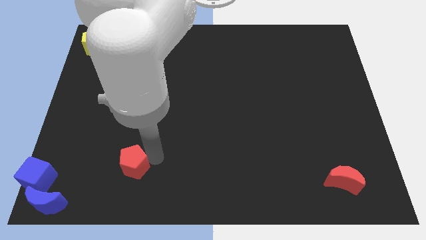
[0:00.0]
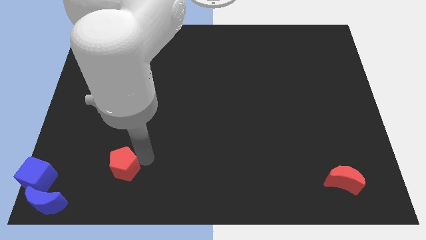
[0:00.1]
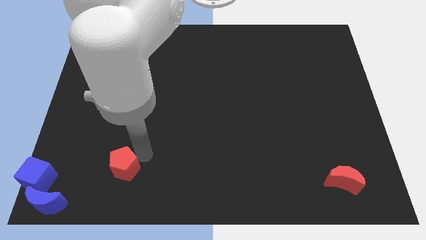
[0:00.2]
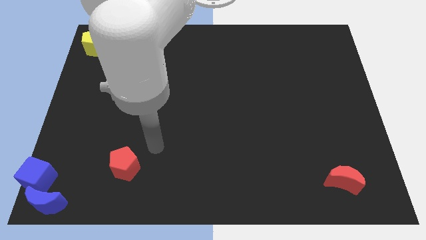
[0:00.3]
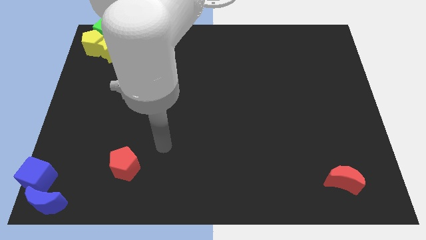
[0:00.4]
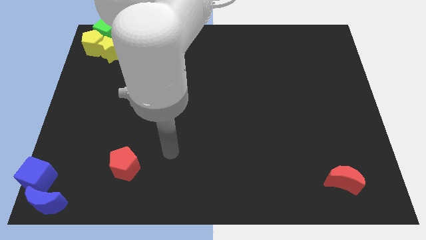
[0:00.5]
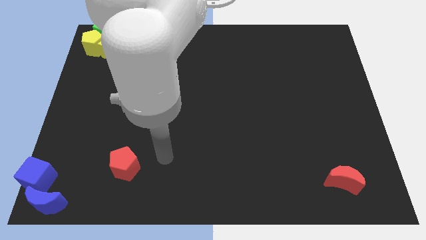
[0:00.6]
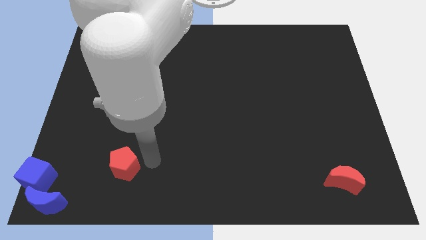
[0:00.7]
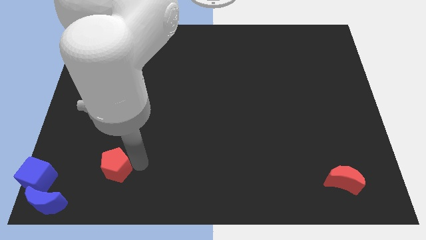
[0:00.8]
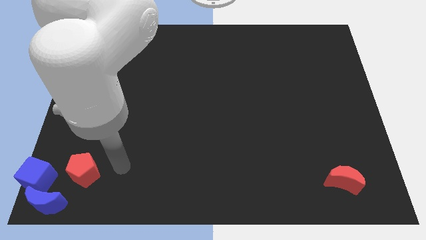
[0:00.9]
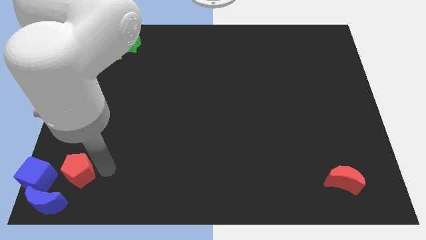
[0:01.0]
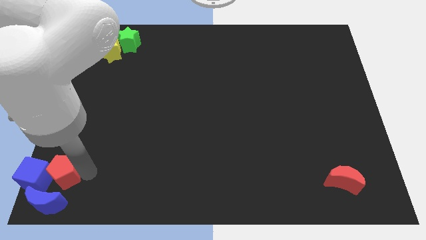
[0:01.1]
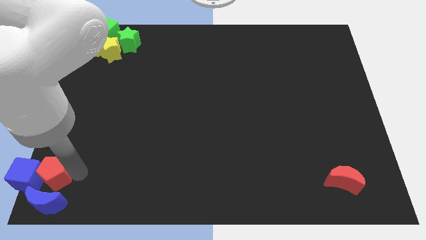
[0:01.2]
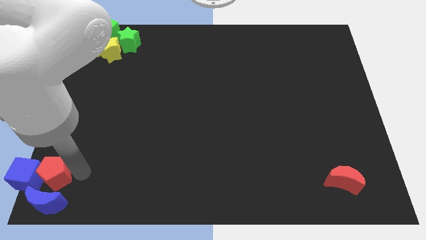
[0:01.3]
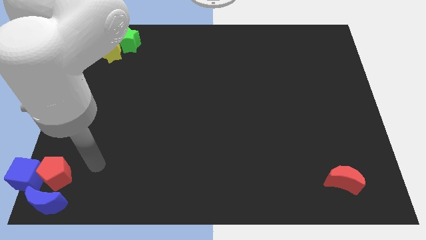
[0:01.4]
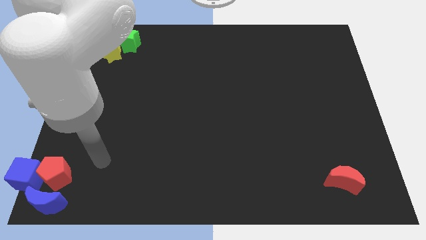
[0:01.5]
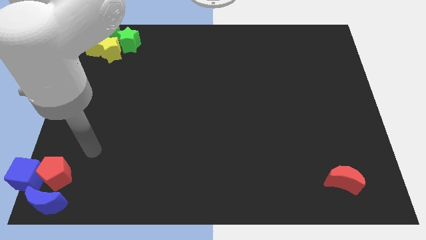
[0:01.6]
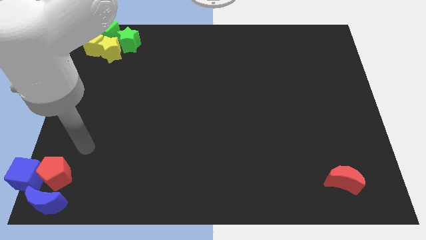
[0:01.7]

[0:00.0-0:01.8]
move the red pentagon to the blue cube and crescent

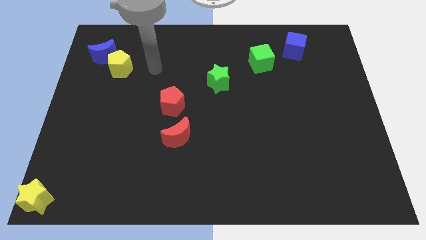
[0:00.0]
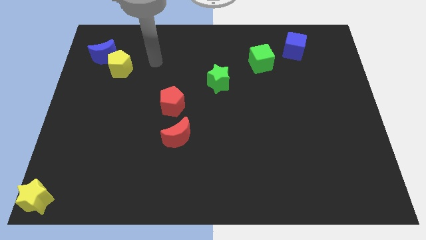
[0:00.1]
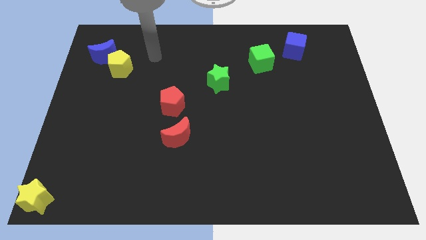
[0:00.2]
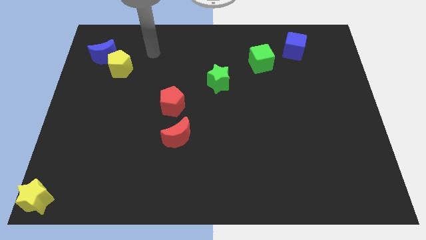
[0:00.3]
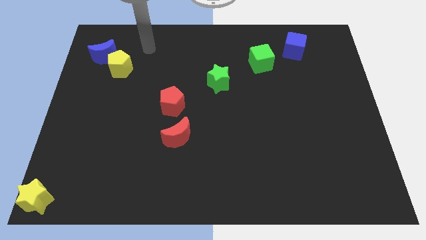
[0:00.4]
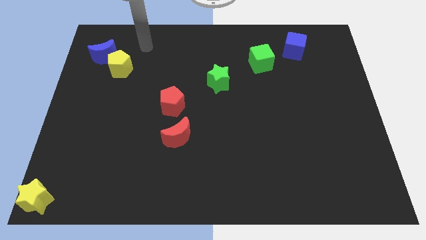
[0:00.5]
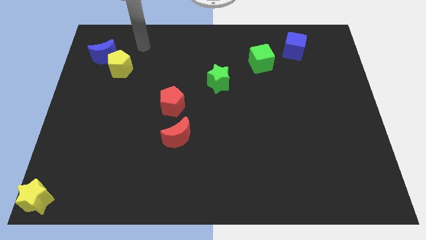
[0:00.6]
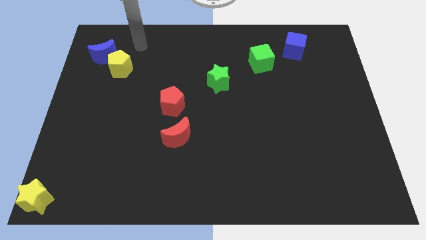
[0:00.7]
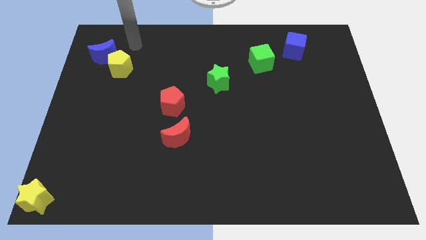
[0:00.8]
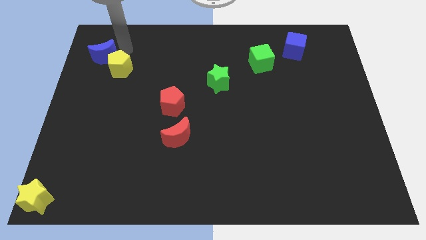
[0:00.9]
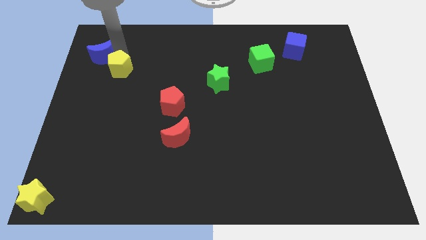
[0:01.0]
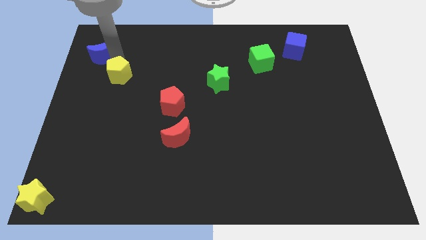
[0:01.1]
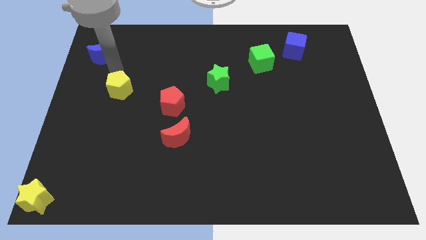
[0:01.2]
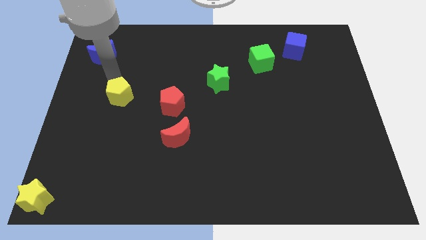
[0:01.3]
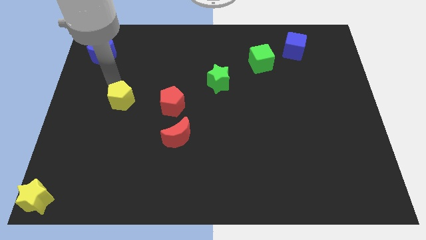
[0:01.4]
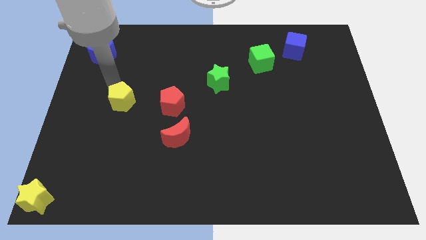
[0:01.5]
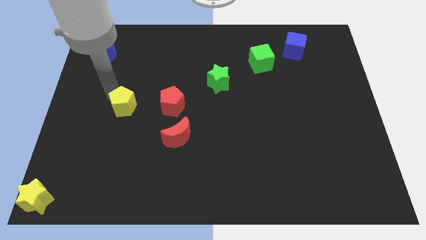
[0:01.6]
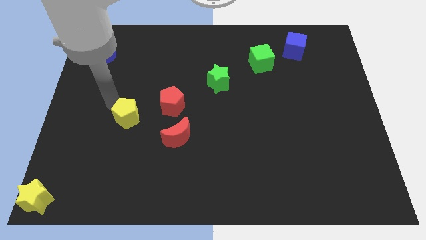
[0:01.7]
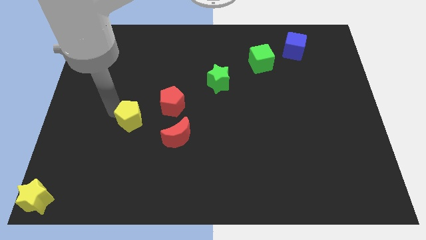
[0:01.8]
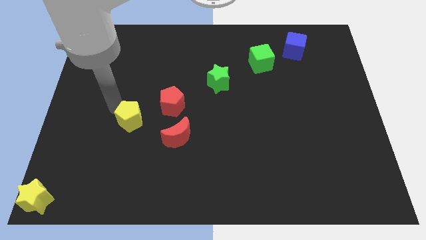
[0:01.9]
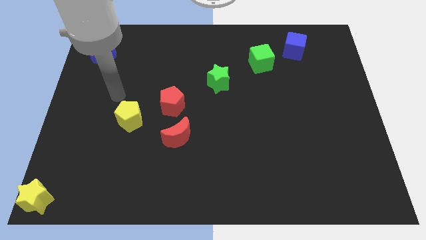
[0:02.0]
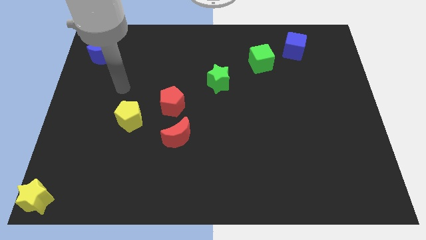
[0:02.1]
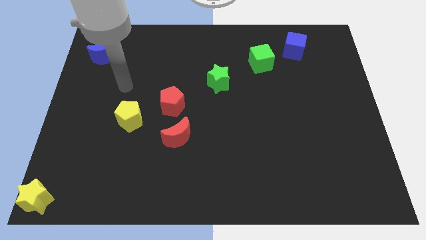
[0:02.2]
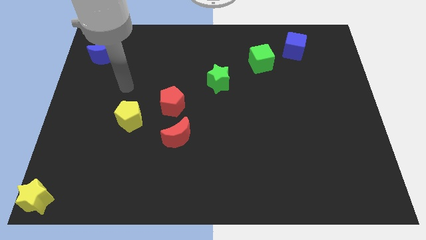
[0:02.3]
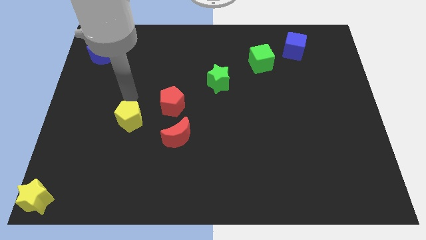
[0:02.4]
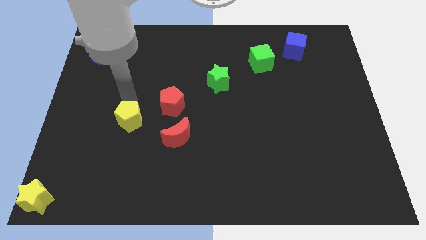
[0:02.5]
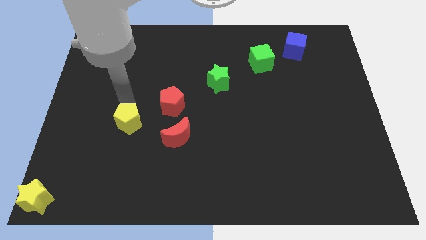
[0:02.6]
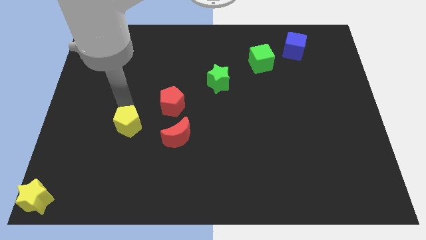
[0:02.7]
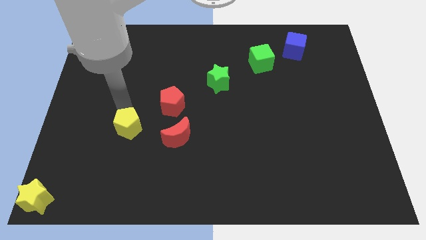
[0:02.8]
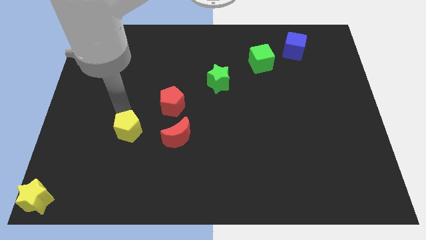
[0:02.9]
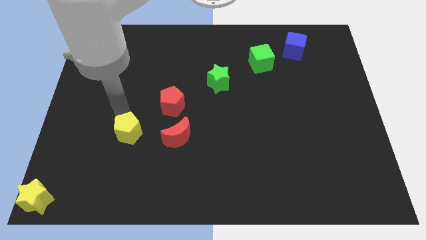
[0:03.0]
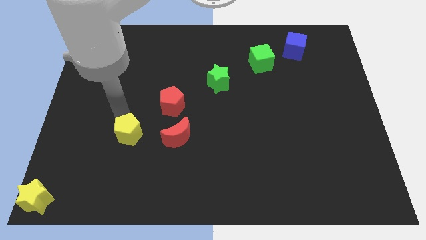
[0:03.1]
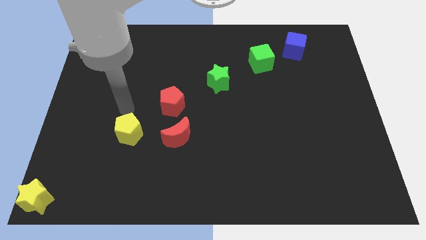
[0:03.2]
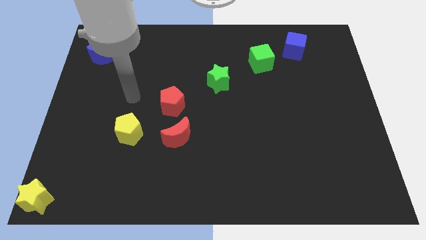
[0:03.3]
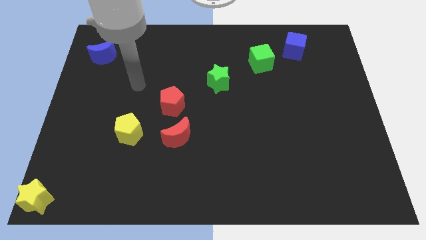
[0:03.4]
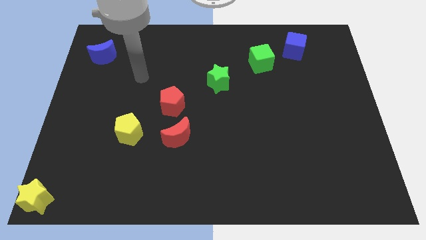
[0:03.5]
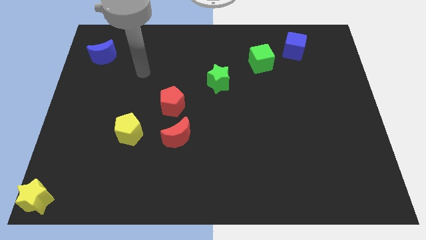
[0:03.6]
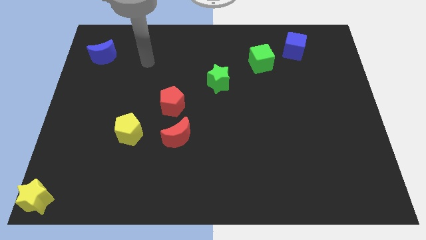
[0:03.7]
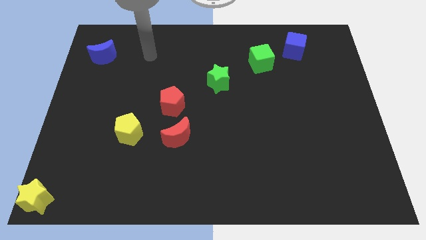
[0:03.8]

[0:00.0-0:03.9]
place the yellow pentagon to the left of the red blocks

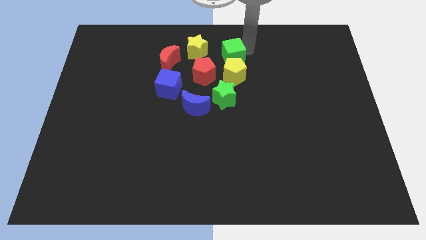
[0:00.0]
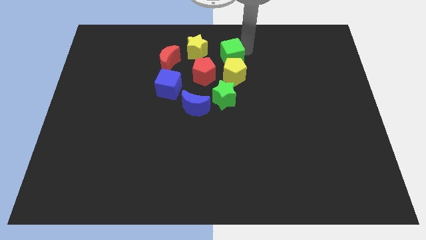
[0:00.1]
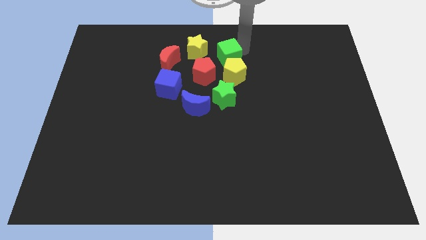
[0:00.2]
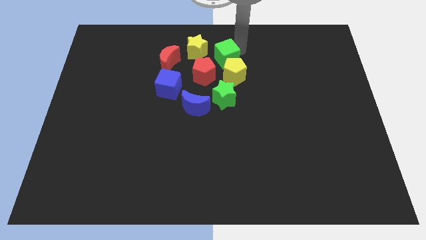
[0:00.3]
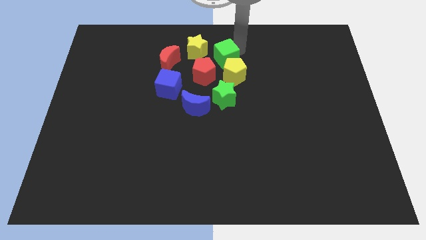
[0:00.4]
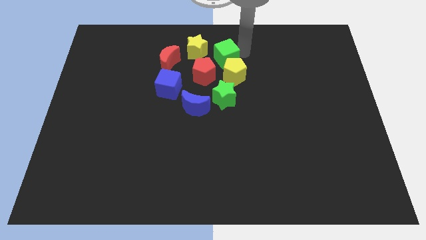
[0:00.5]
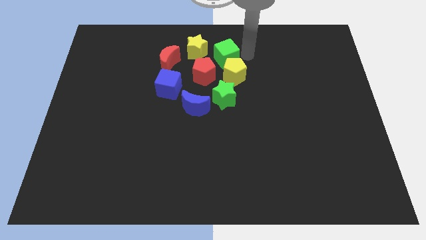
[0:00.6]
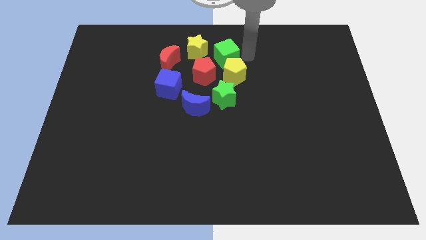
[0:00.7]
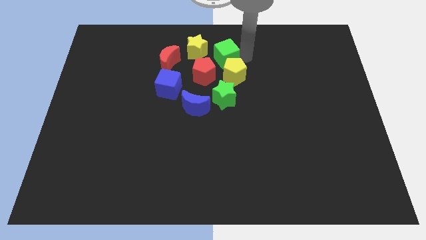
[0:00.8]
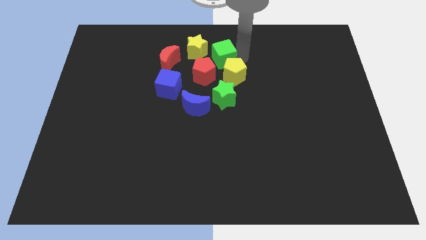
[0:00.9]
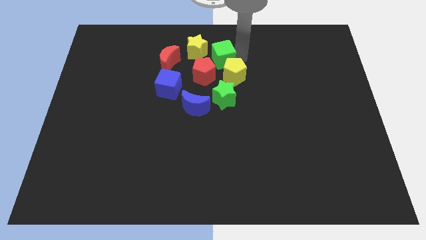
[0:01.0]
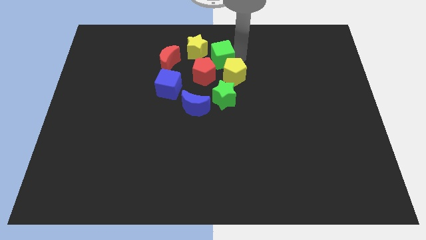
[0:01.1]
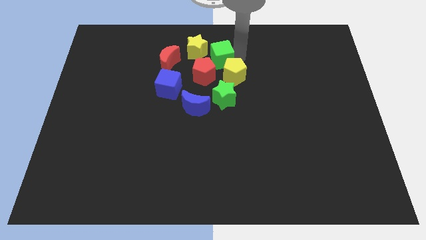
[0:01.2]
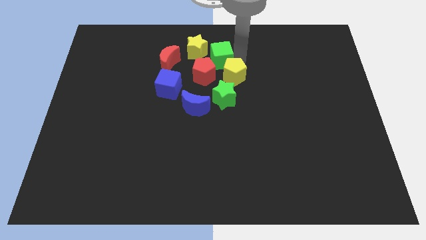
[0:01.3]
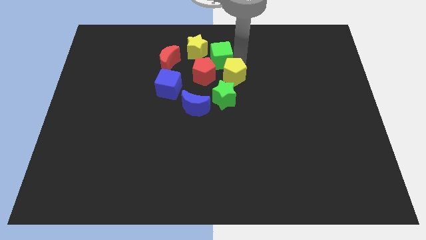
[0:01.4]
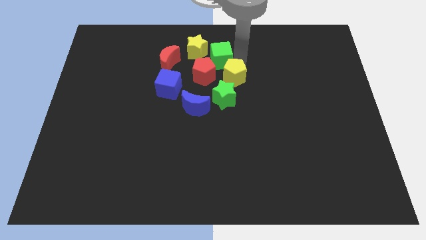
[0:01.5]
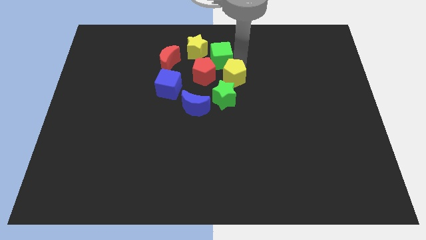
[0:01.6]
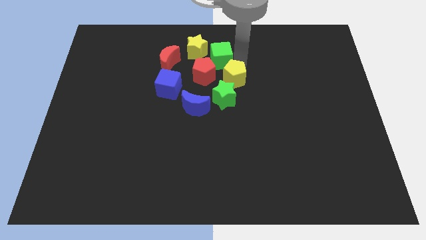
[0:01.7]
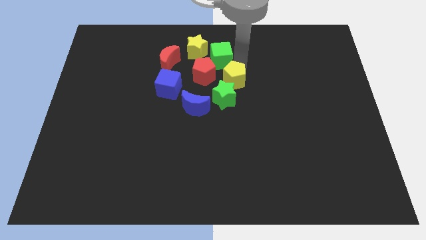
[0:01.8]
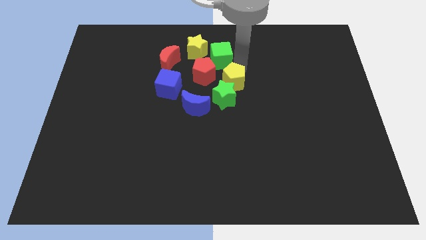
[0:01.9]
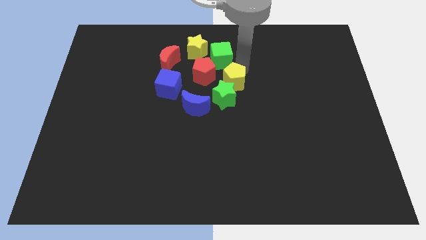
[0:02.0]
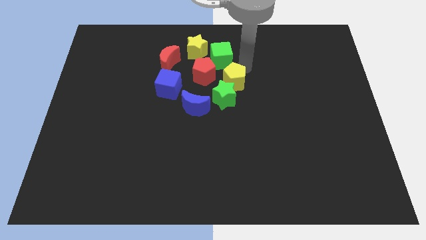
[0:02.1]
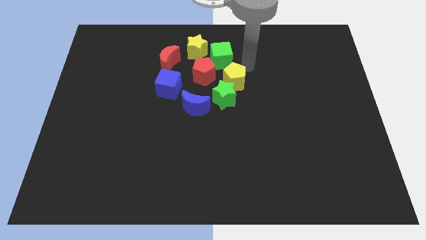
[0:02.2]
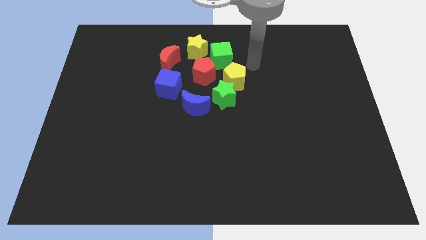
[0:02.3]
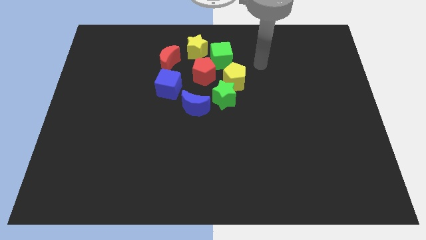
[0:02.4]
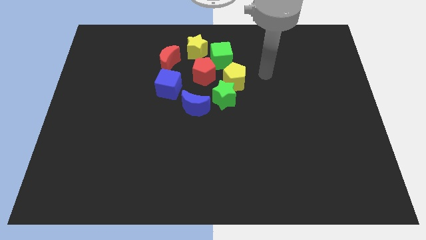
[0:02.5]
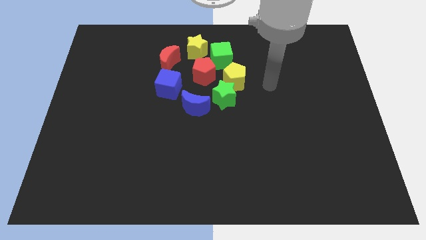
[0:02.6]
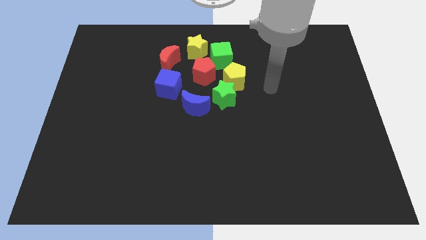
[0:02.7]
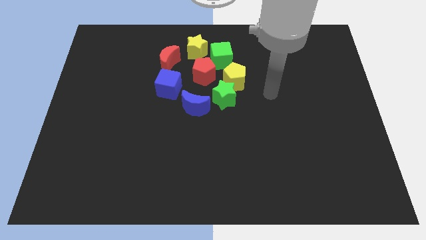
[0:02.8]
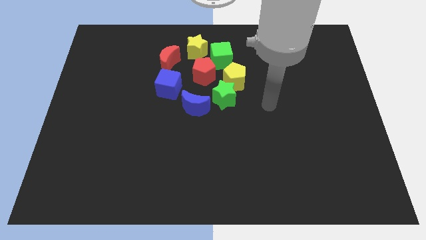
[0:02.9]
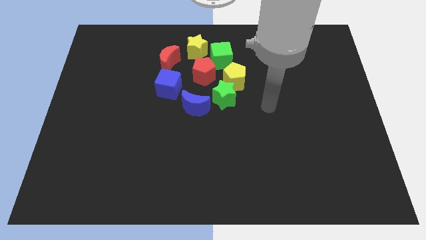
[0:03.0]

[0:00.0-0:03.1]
slightly push down the yellow pentagon

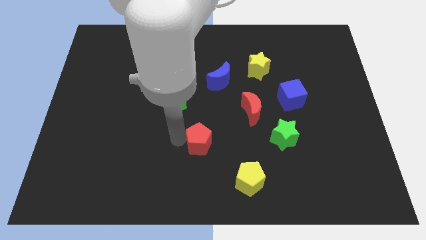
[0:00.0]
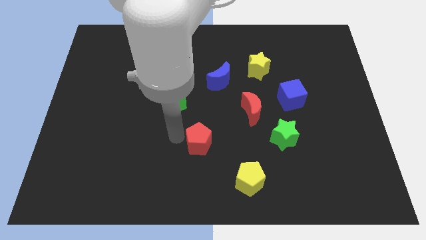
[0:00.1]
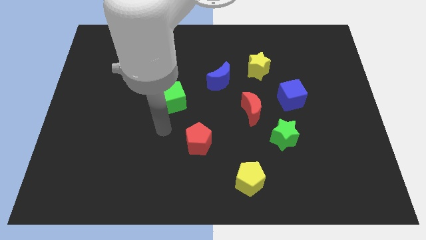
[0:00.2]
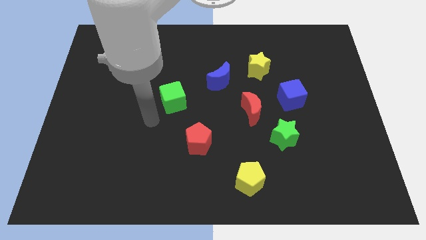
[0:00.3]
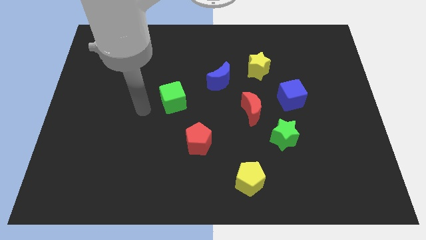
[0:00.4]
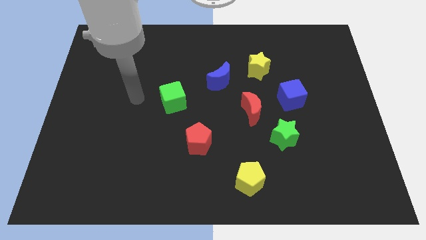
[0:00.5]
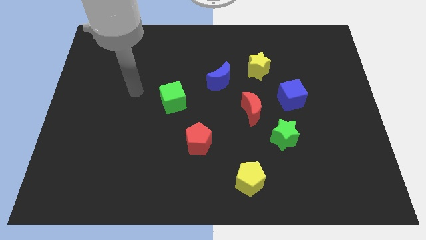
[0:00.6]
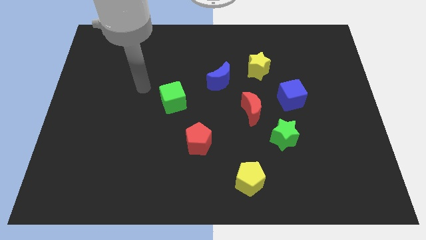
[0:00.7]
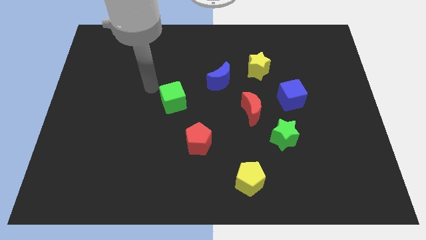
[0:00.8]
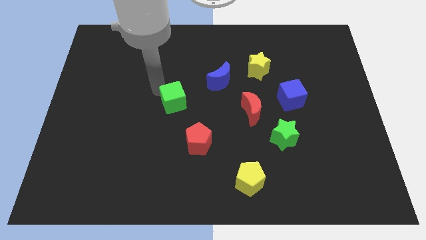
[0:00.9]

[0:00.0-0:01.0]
move your arm to the top of green cube
